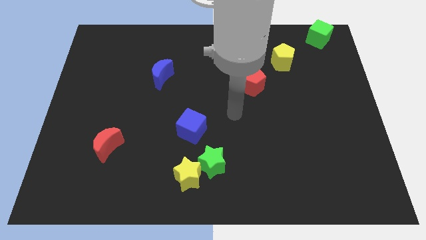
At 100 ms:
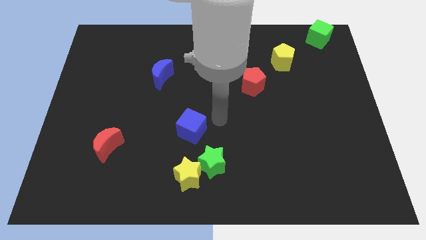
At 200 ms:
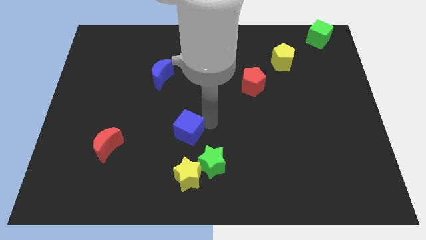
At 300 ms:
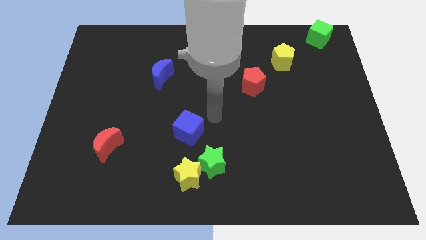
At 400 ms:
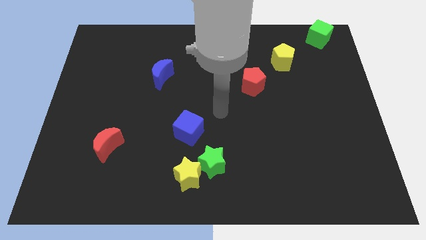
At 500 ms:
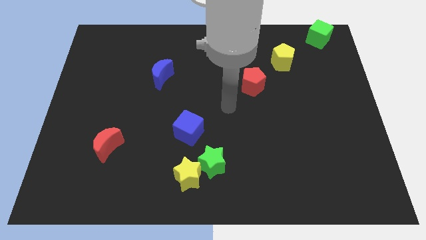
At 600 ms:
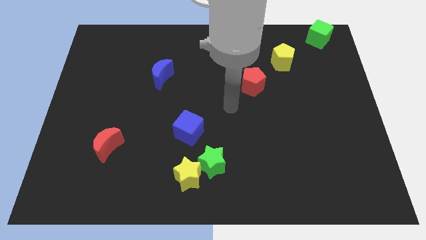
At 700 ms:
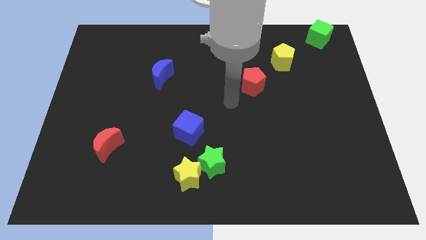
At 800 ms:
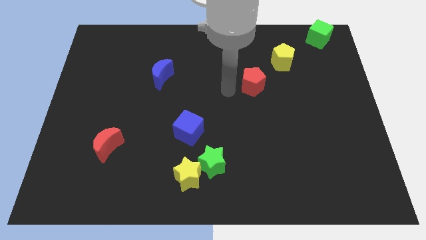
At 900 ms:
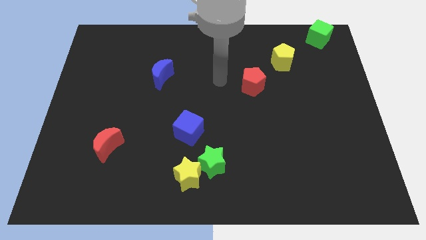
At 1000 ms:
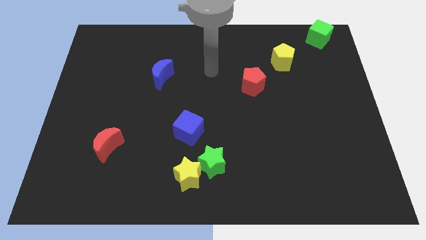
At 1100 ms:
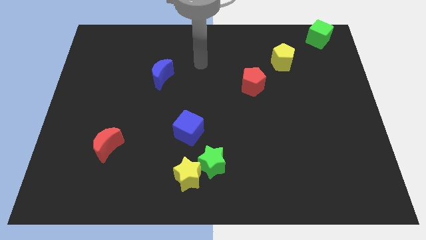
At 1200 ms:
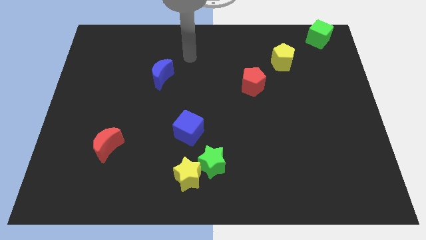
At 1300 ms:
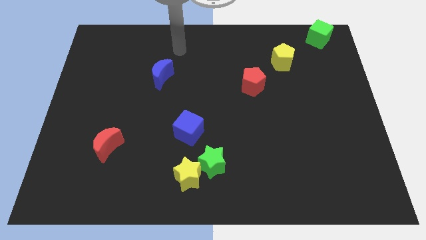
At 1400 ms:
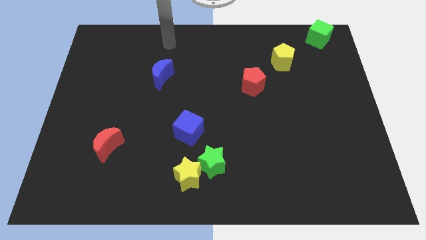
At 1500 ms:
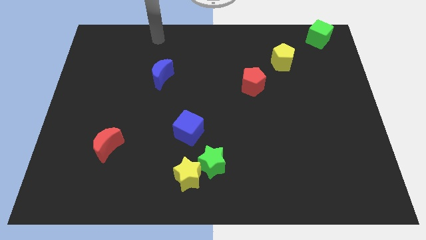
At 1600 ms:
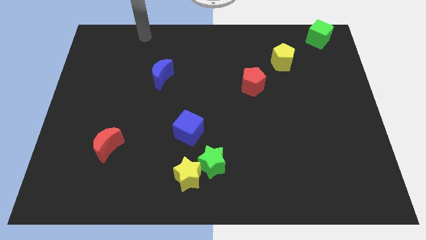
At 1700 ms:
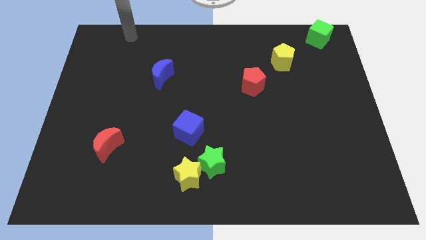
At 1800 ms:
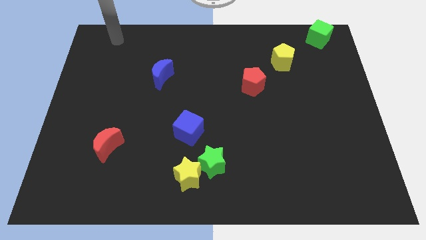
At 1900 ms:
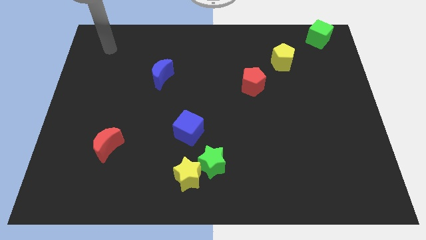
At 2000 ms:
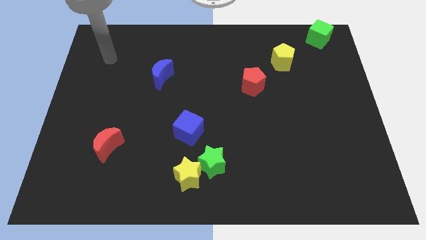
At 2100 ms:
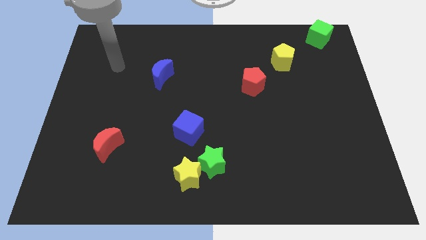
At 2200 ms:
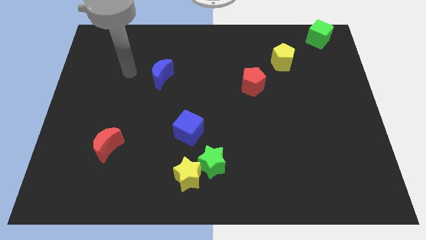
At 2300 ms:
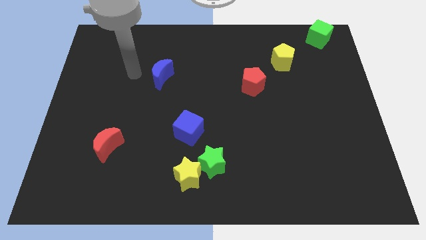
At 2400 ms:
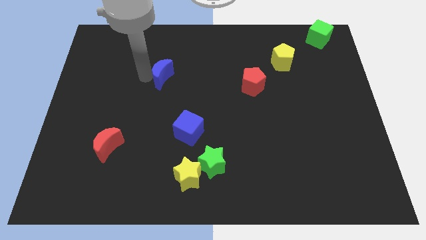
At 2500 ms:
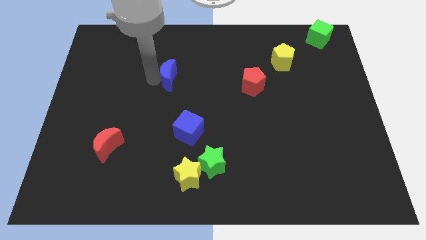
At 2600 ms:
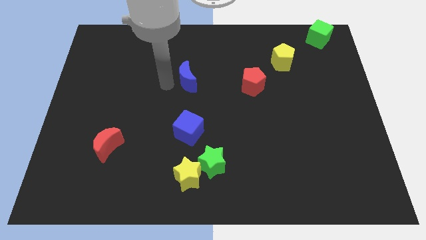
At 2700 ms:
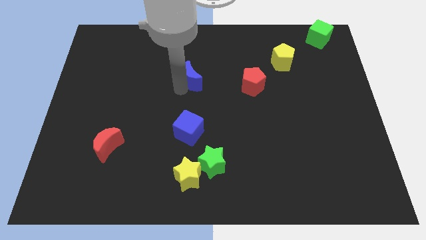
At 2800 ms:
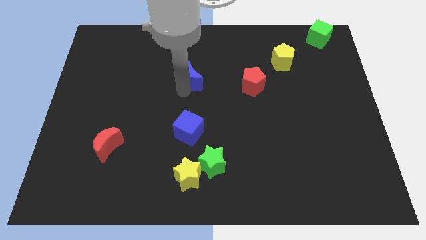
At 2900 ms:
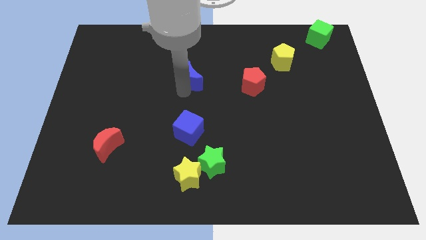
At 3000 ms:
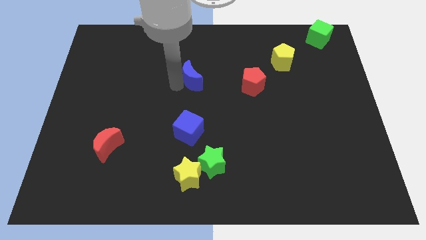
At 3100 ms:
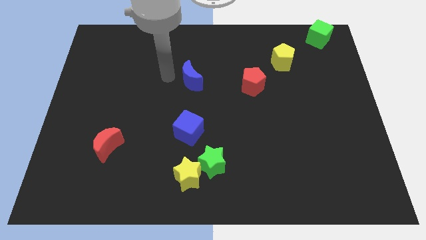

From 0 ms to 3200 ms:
place blue blocks in a vertical line

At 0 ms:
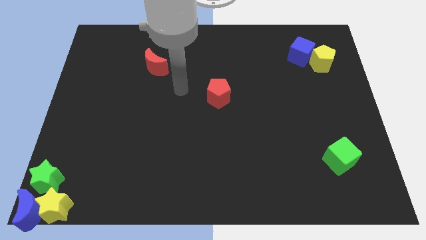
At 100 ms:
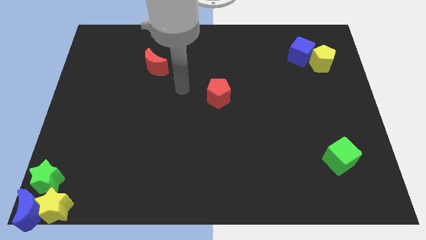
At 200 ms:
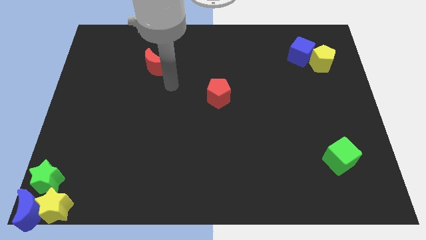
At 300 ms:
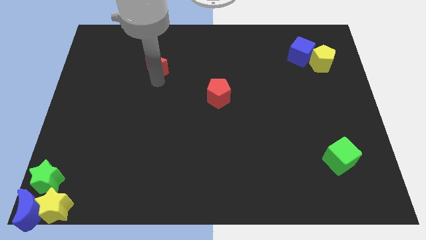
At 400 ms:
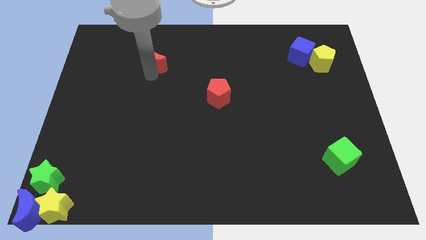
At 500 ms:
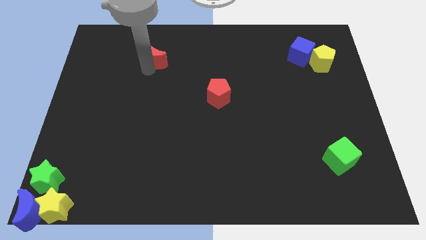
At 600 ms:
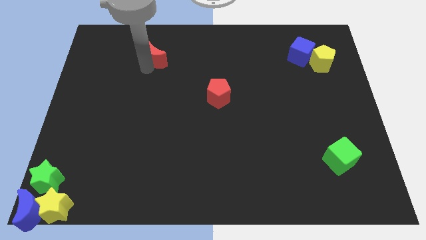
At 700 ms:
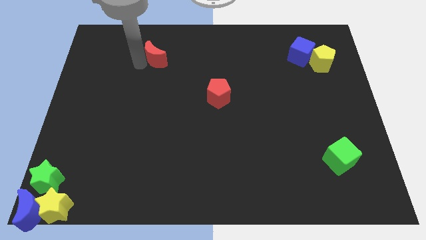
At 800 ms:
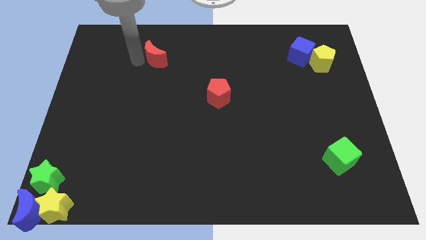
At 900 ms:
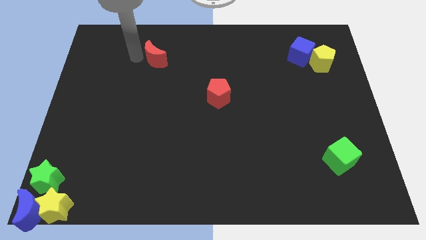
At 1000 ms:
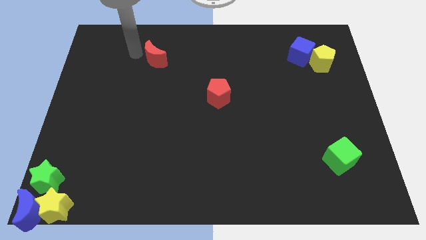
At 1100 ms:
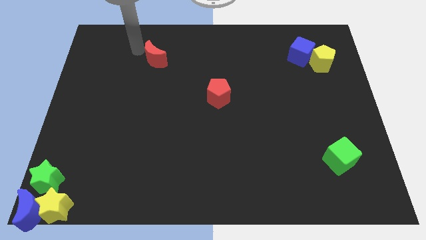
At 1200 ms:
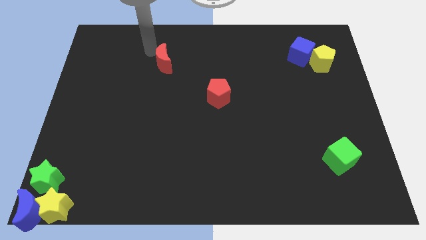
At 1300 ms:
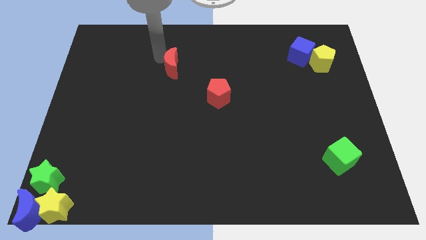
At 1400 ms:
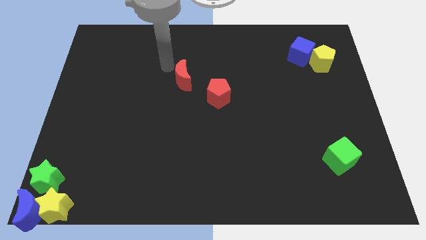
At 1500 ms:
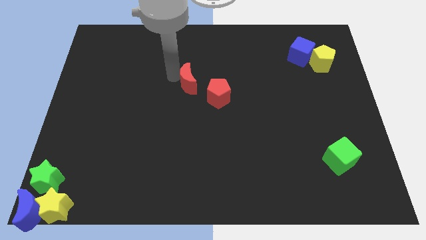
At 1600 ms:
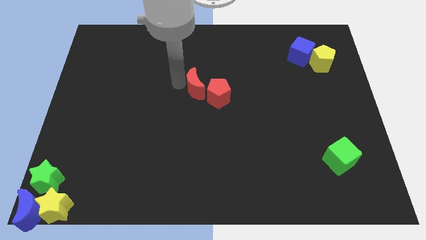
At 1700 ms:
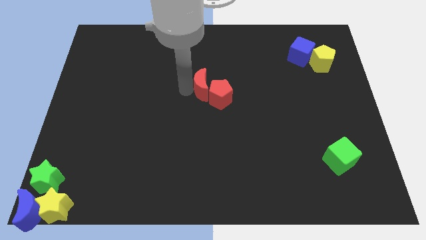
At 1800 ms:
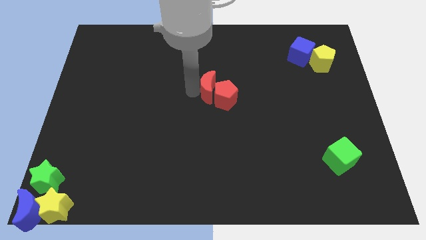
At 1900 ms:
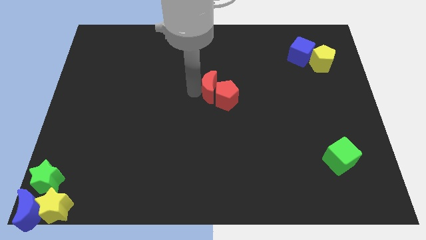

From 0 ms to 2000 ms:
move red moon into the red pentagon

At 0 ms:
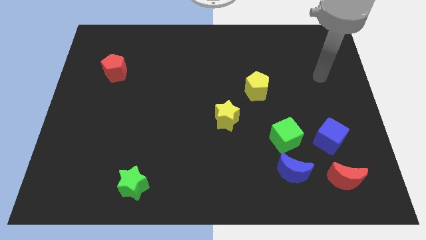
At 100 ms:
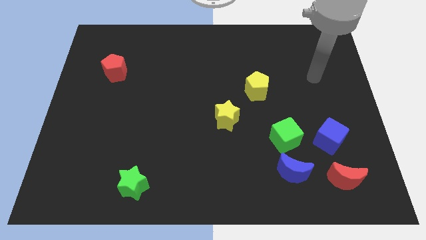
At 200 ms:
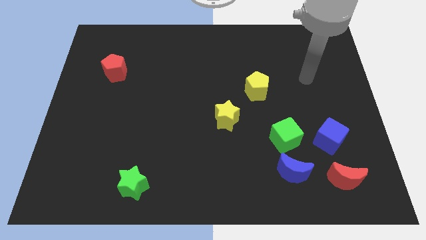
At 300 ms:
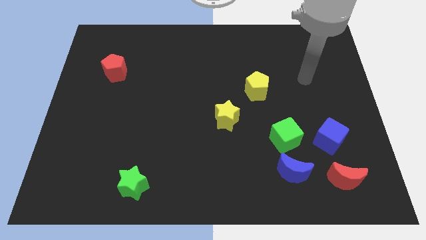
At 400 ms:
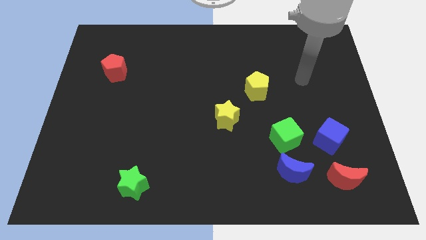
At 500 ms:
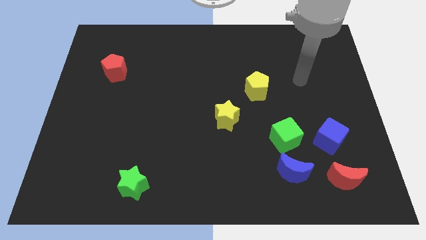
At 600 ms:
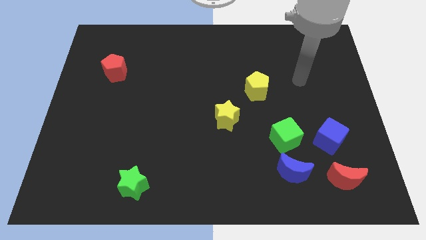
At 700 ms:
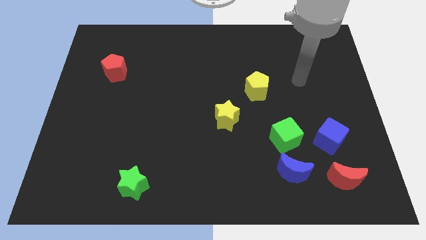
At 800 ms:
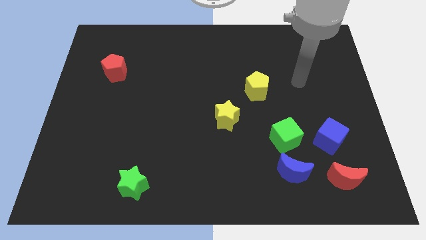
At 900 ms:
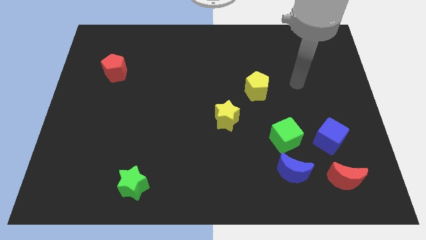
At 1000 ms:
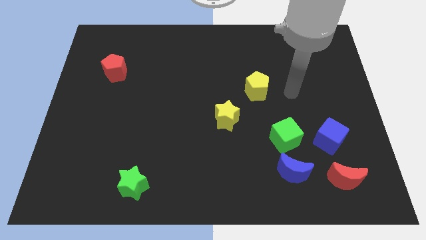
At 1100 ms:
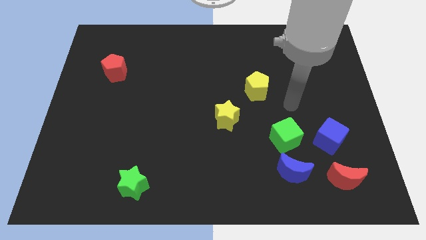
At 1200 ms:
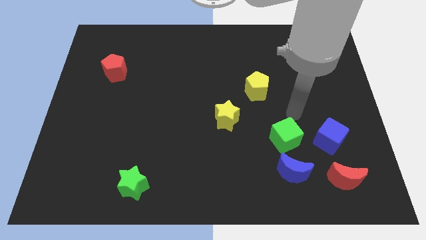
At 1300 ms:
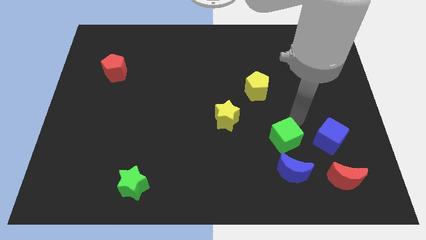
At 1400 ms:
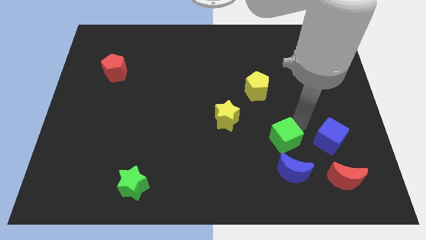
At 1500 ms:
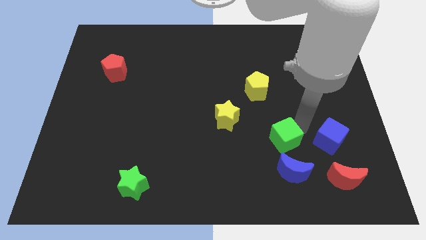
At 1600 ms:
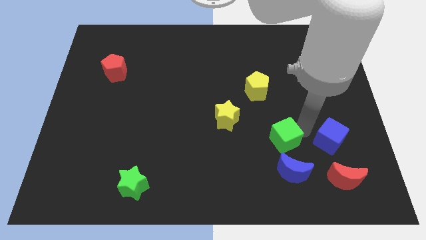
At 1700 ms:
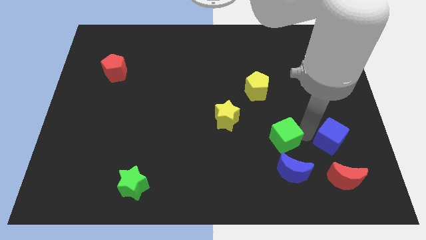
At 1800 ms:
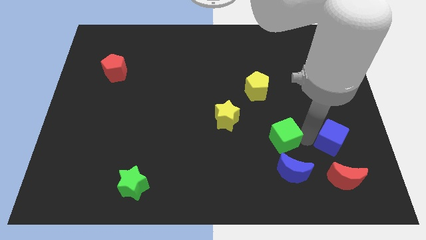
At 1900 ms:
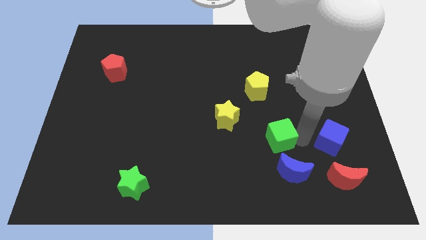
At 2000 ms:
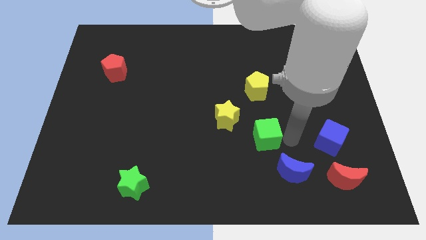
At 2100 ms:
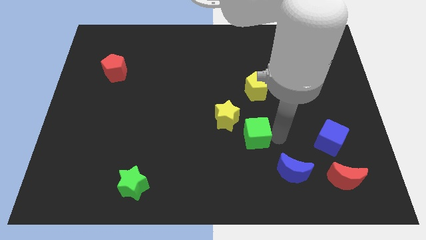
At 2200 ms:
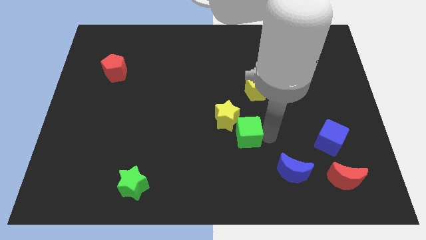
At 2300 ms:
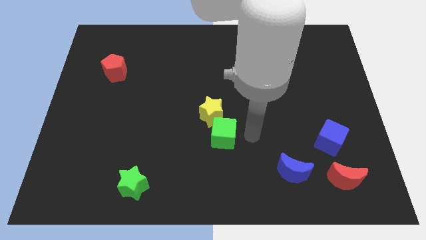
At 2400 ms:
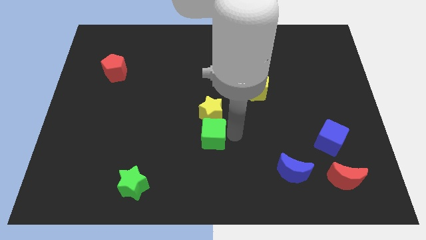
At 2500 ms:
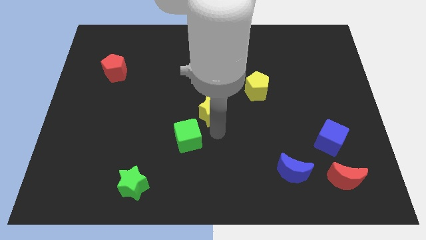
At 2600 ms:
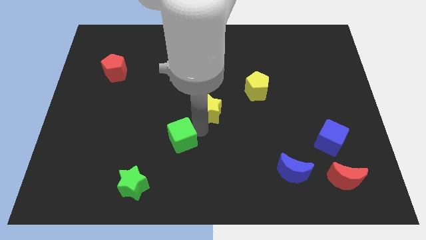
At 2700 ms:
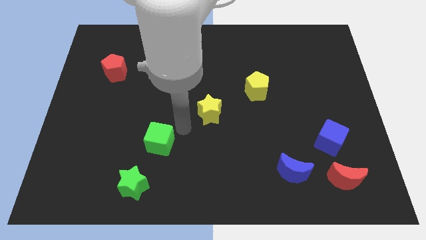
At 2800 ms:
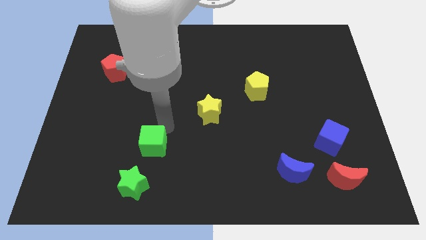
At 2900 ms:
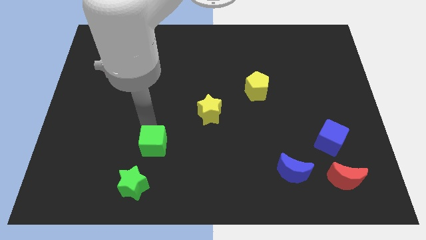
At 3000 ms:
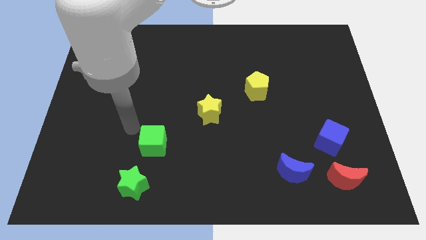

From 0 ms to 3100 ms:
push the green cube to the horizotal left of the blue cube

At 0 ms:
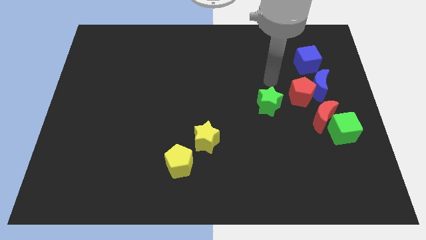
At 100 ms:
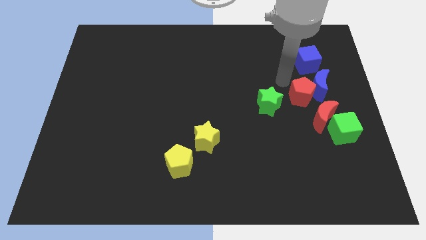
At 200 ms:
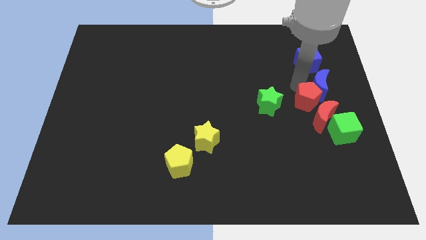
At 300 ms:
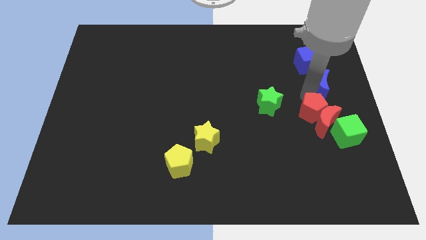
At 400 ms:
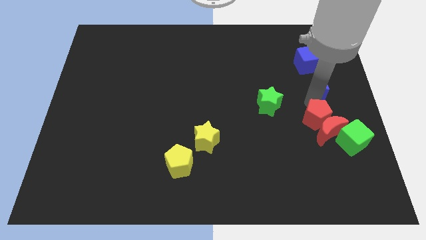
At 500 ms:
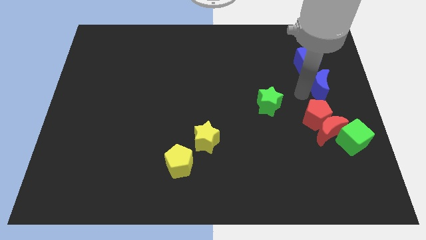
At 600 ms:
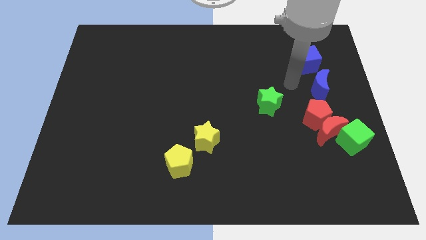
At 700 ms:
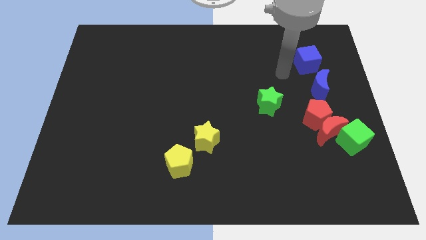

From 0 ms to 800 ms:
place the red pentagon above the red crescent
